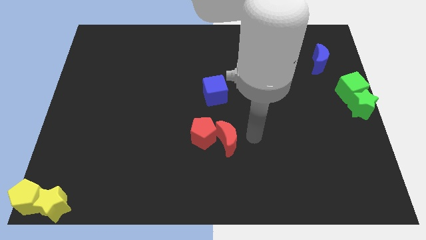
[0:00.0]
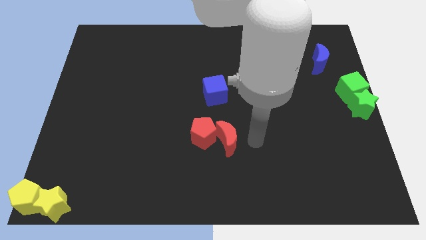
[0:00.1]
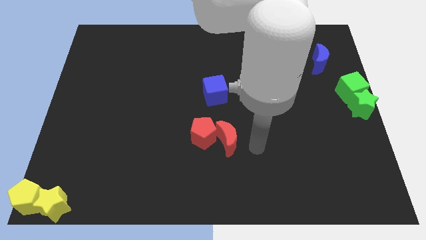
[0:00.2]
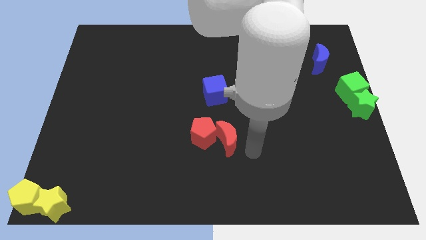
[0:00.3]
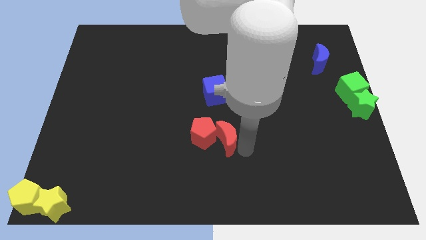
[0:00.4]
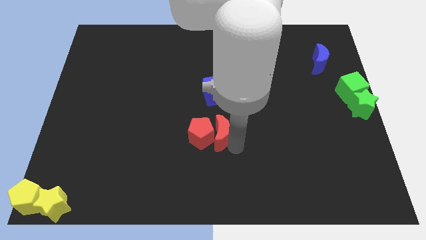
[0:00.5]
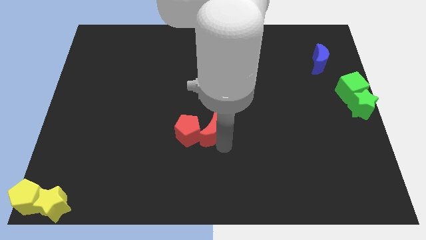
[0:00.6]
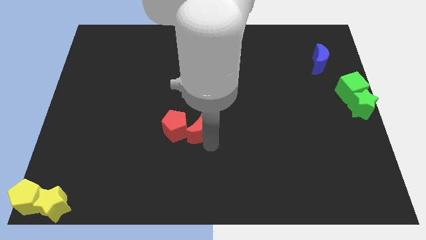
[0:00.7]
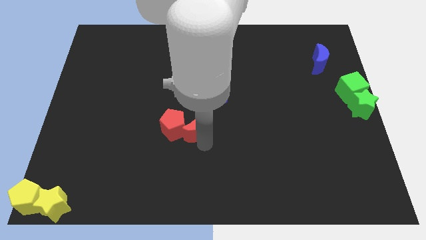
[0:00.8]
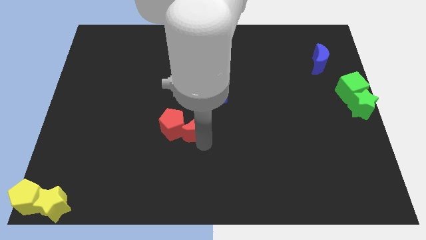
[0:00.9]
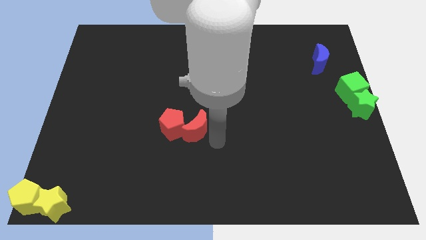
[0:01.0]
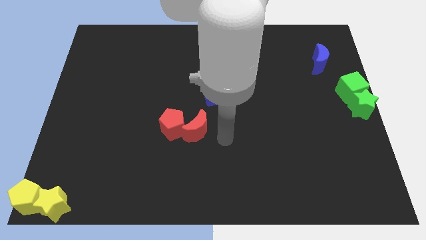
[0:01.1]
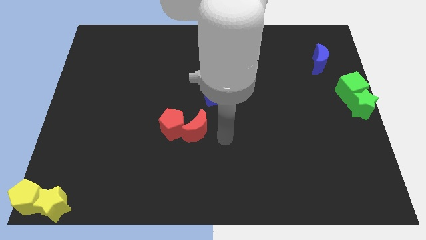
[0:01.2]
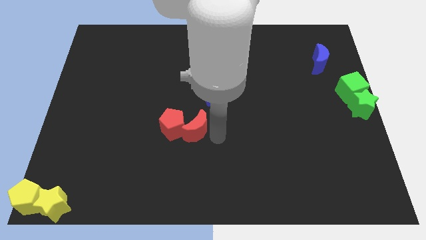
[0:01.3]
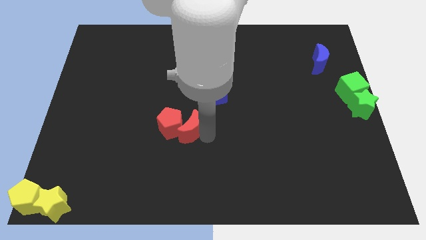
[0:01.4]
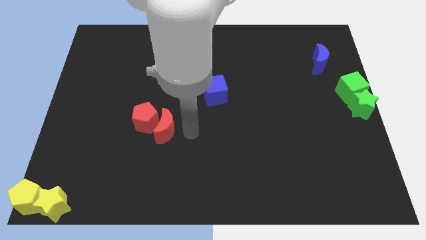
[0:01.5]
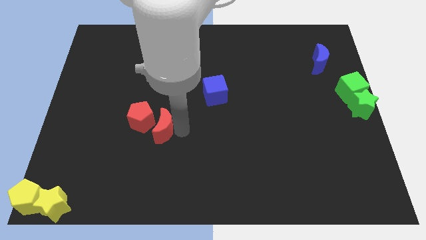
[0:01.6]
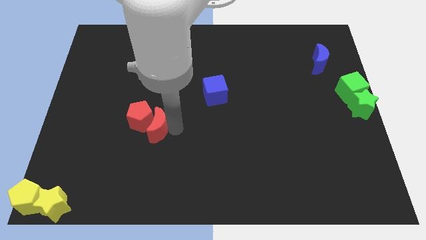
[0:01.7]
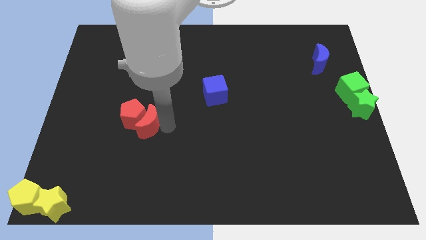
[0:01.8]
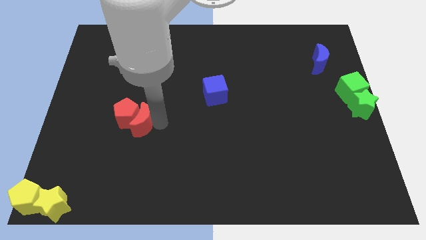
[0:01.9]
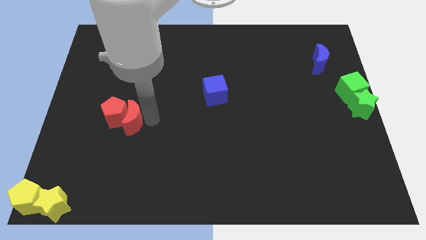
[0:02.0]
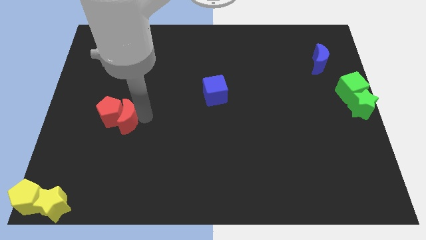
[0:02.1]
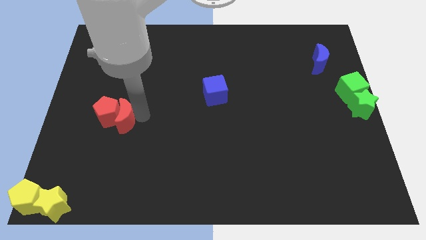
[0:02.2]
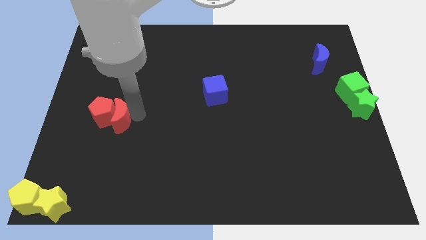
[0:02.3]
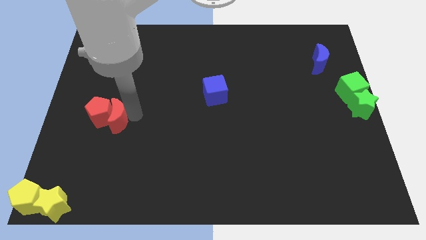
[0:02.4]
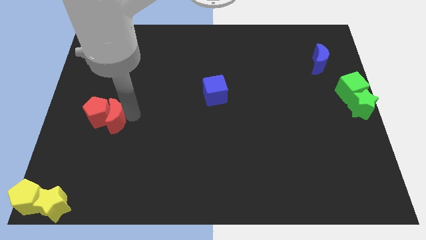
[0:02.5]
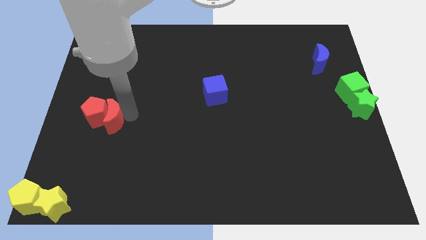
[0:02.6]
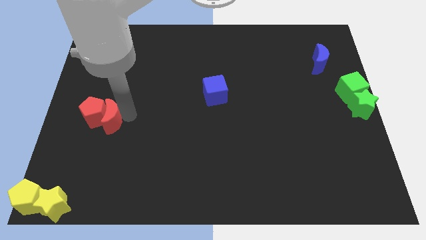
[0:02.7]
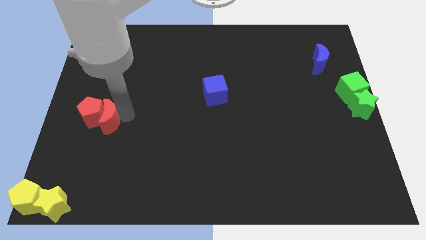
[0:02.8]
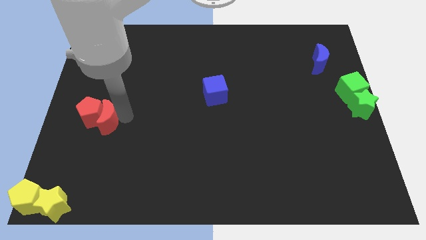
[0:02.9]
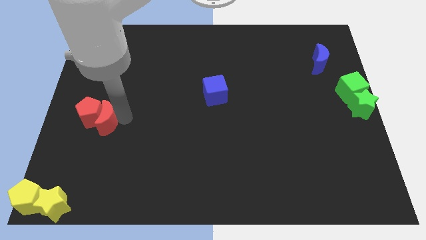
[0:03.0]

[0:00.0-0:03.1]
push red moon along with red pentagon towards left center of the board

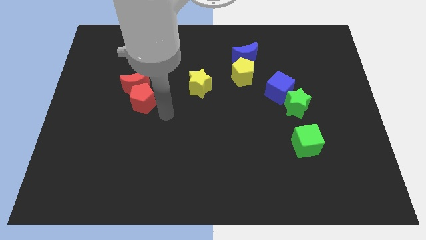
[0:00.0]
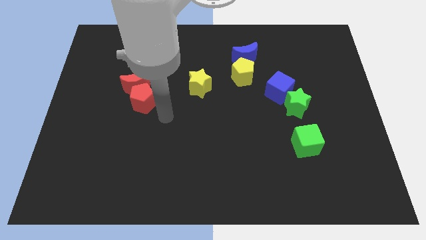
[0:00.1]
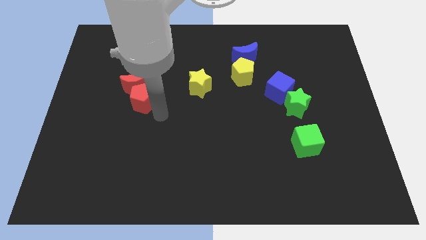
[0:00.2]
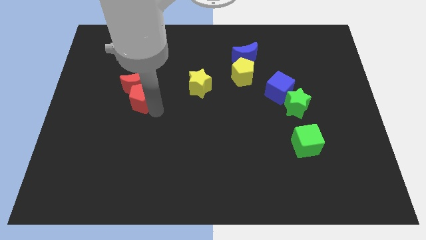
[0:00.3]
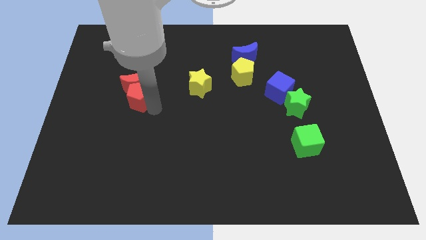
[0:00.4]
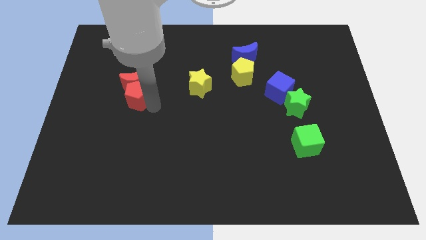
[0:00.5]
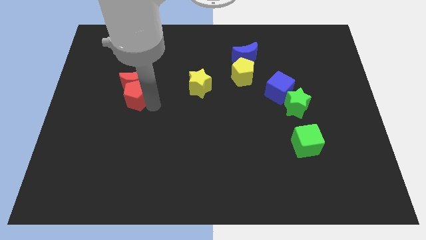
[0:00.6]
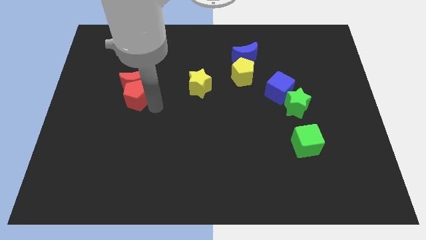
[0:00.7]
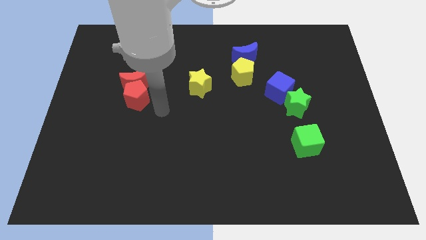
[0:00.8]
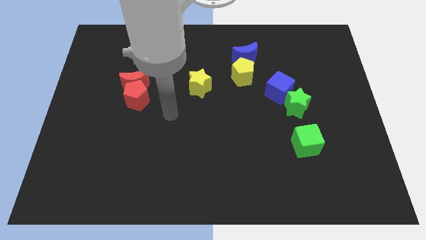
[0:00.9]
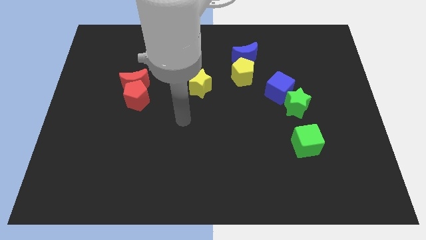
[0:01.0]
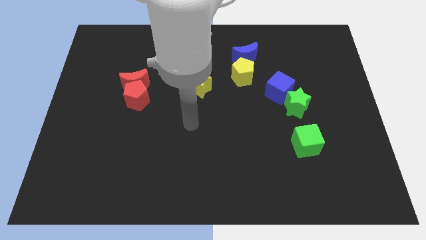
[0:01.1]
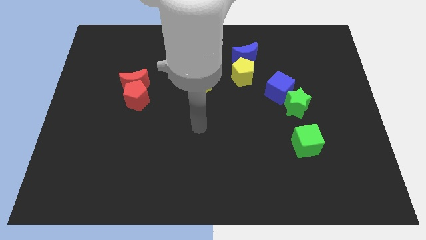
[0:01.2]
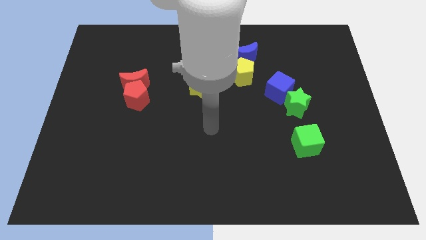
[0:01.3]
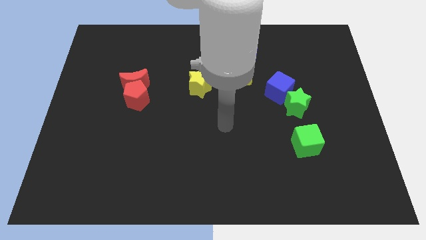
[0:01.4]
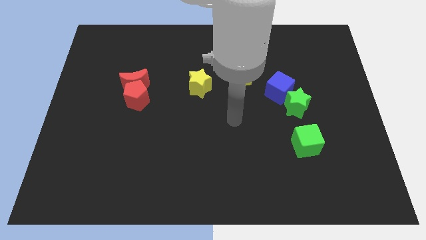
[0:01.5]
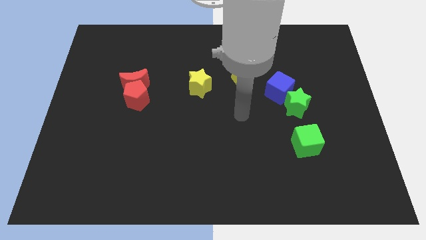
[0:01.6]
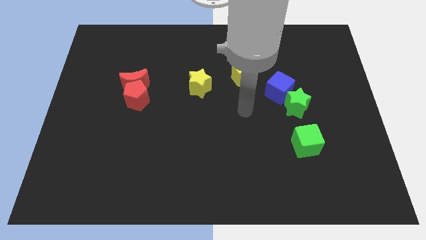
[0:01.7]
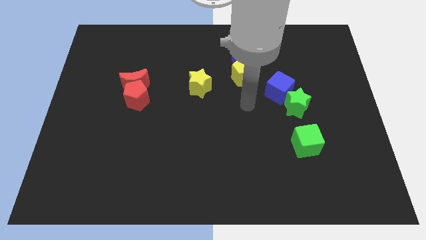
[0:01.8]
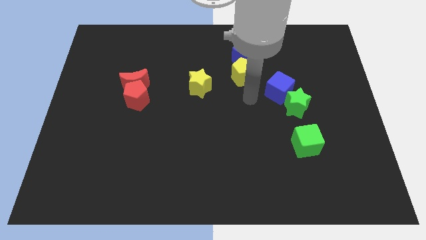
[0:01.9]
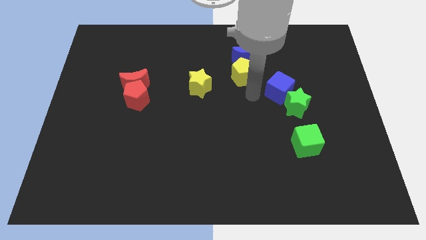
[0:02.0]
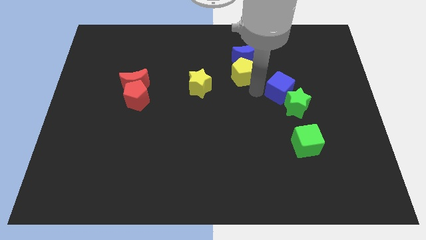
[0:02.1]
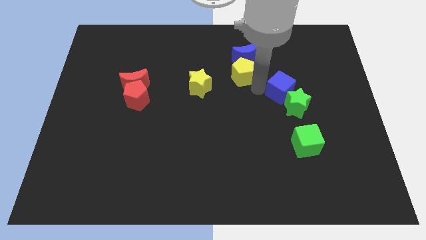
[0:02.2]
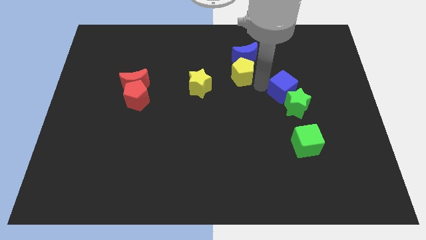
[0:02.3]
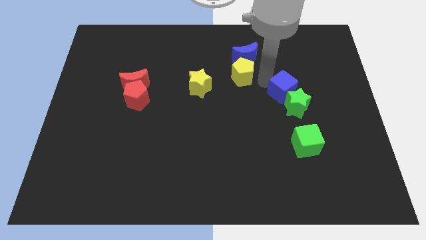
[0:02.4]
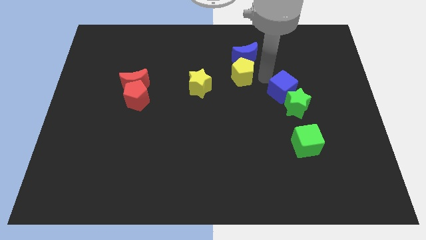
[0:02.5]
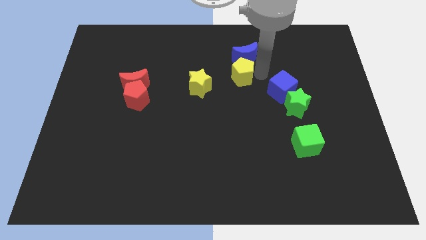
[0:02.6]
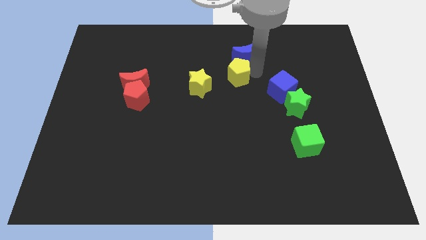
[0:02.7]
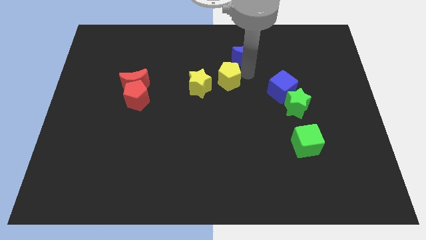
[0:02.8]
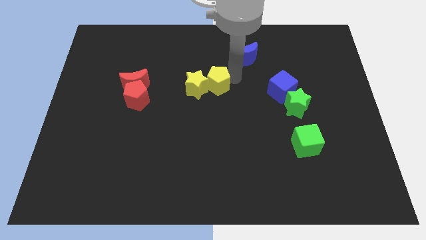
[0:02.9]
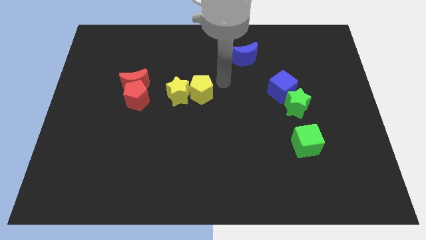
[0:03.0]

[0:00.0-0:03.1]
move the yellow pentagon close to yellow star

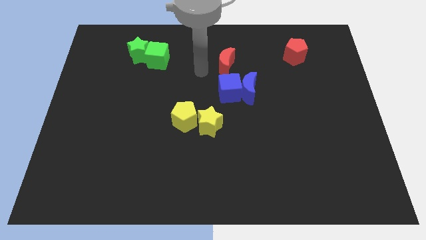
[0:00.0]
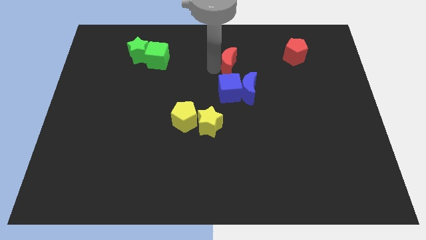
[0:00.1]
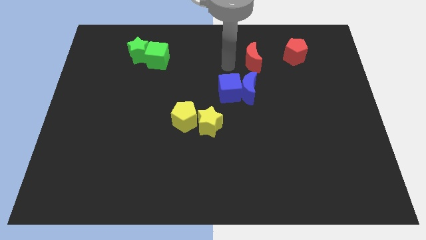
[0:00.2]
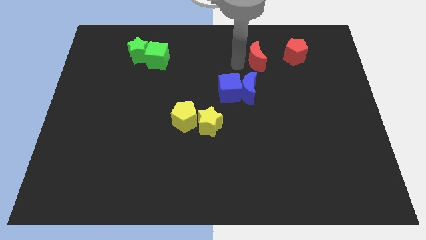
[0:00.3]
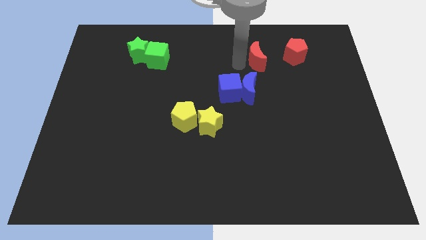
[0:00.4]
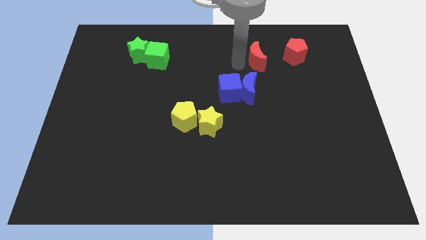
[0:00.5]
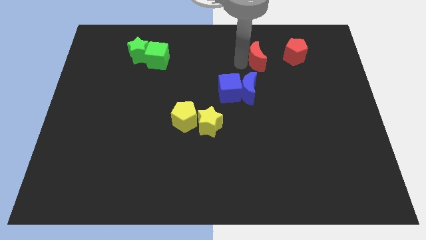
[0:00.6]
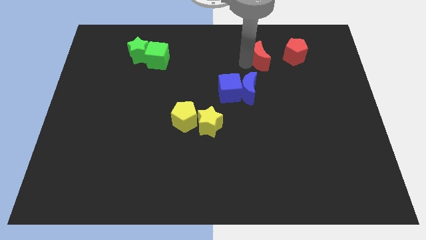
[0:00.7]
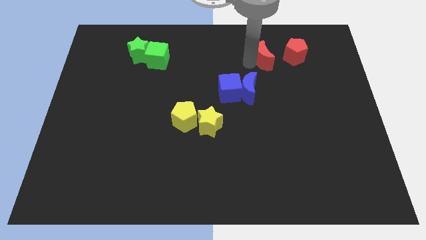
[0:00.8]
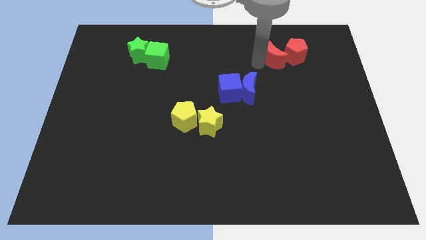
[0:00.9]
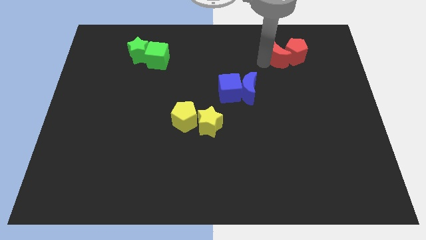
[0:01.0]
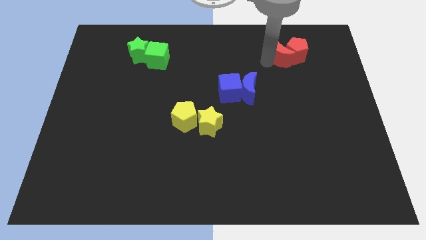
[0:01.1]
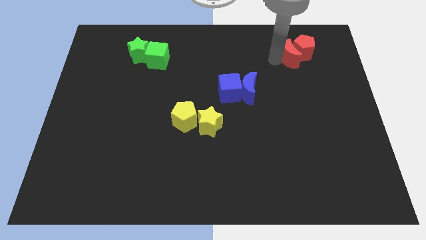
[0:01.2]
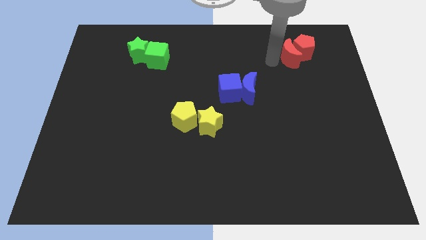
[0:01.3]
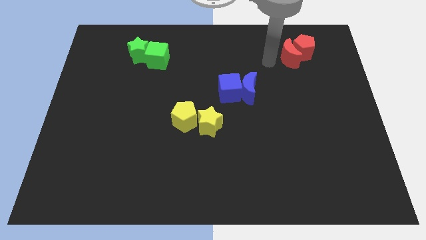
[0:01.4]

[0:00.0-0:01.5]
push the red moon into the red pentagon

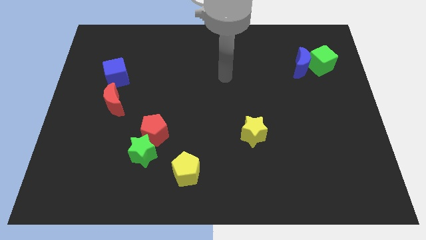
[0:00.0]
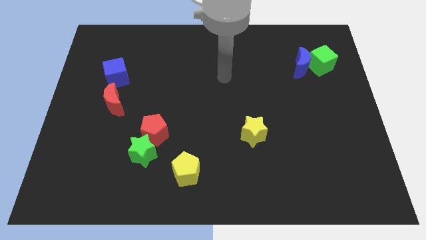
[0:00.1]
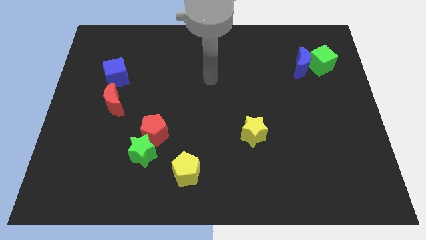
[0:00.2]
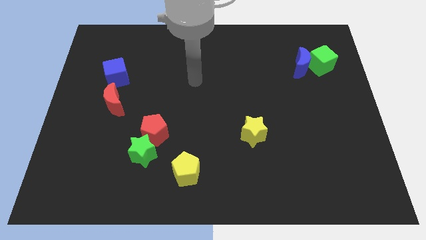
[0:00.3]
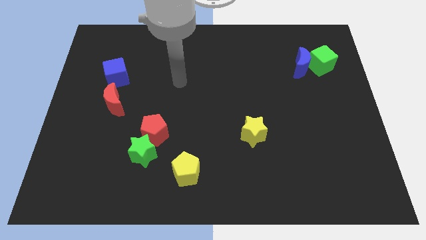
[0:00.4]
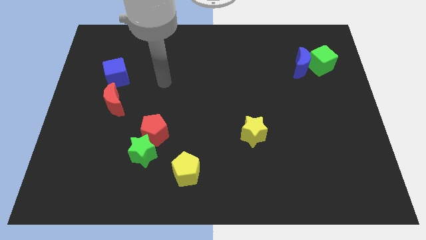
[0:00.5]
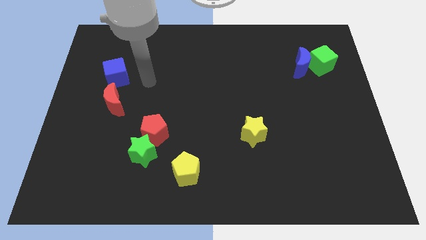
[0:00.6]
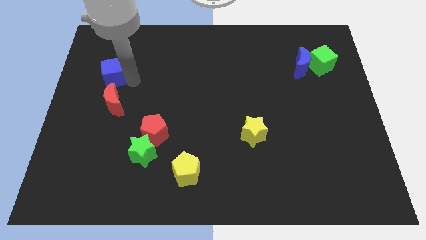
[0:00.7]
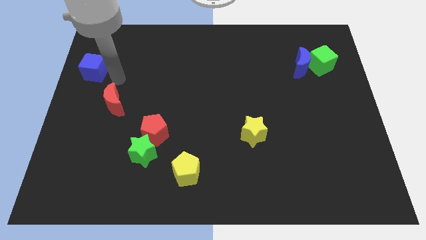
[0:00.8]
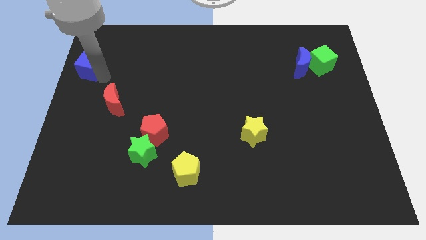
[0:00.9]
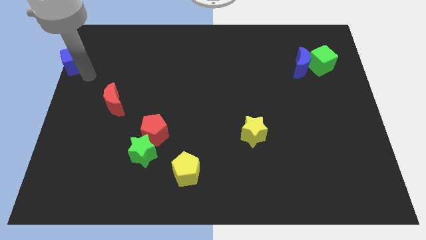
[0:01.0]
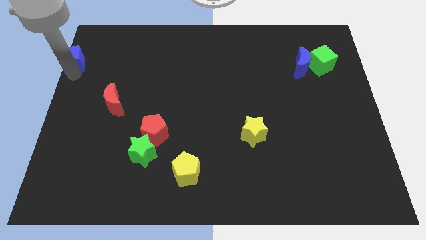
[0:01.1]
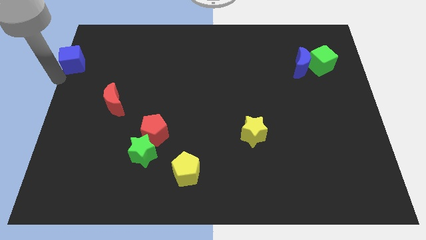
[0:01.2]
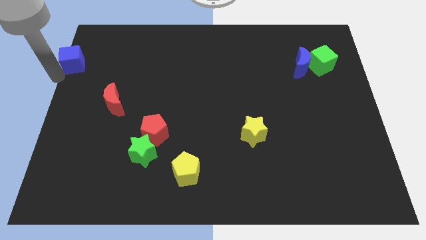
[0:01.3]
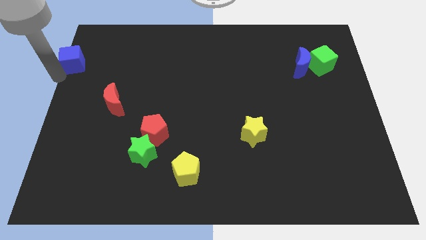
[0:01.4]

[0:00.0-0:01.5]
slide the blue cube to the left
